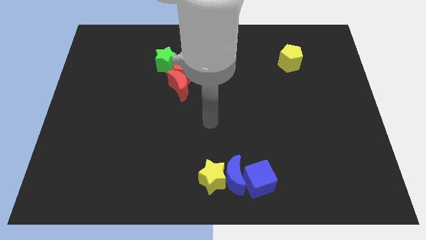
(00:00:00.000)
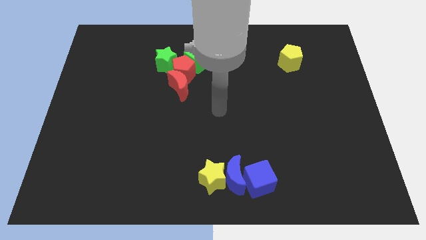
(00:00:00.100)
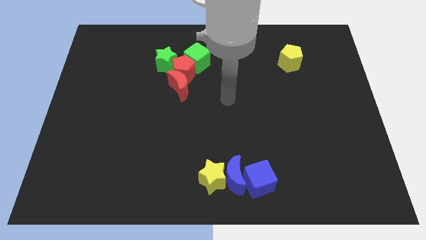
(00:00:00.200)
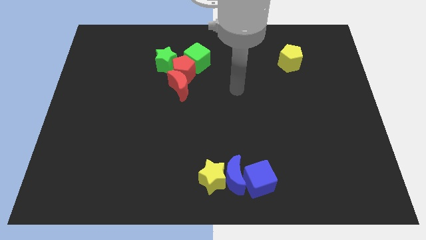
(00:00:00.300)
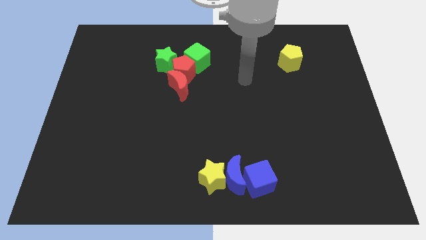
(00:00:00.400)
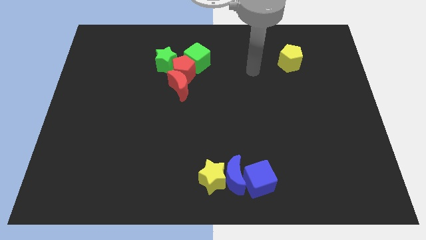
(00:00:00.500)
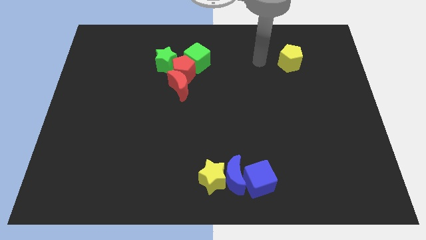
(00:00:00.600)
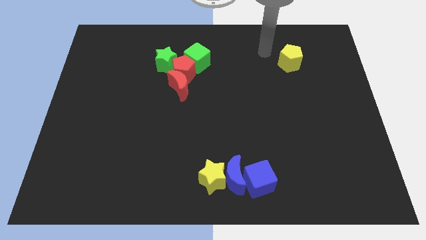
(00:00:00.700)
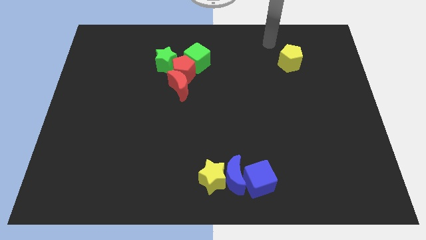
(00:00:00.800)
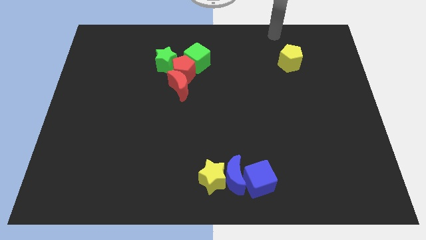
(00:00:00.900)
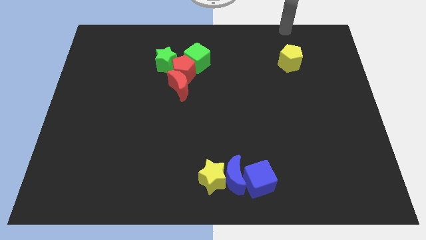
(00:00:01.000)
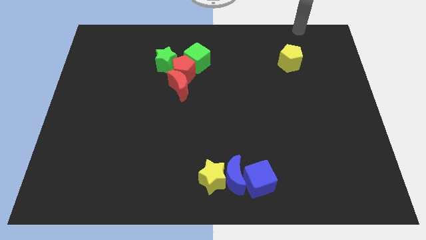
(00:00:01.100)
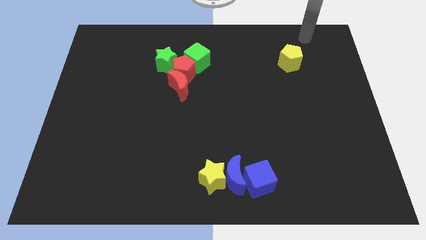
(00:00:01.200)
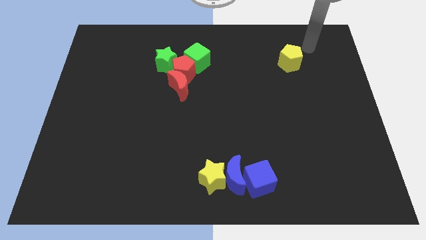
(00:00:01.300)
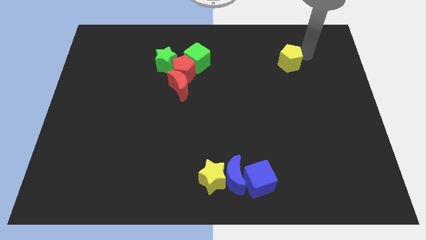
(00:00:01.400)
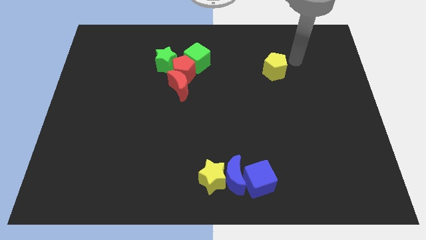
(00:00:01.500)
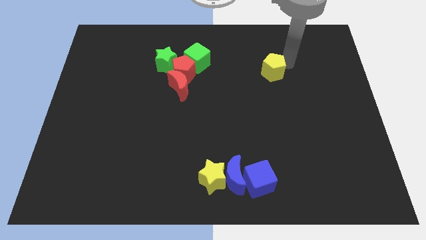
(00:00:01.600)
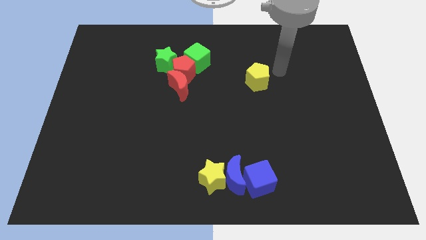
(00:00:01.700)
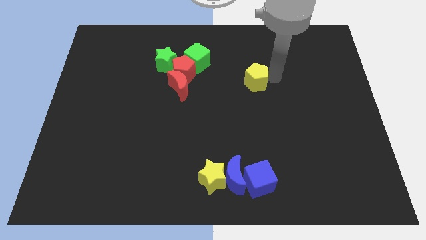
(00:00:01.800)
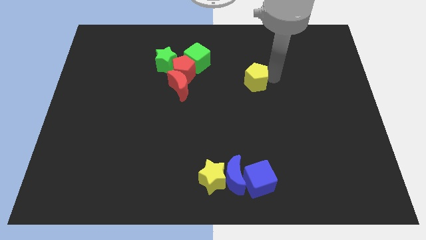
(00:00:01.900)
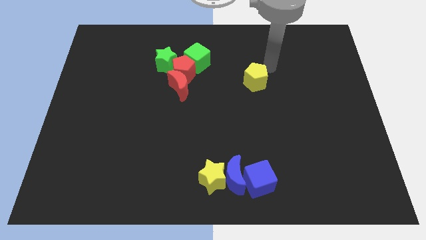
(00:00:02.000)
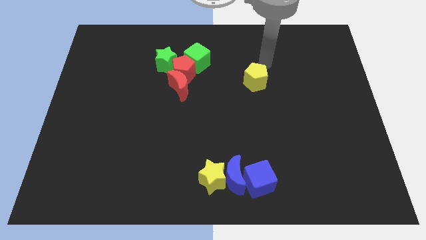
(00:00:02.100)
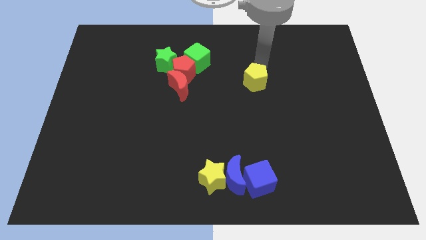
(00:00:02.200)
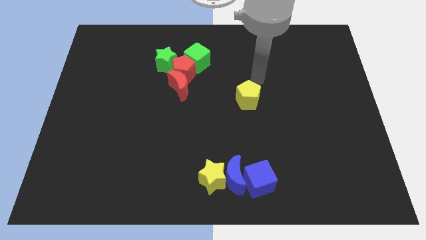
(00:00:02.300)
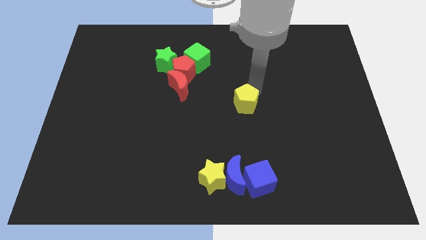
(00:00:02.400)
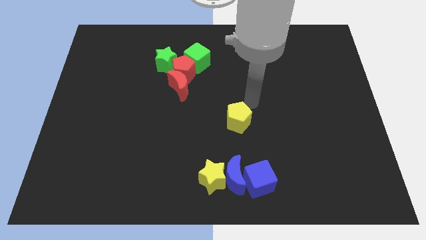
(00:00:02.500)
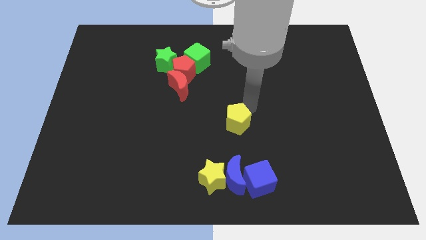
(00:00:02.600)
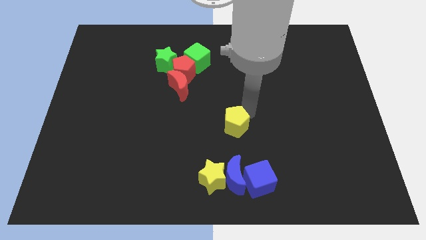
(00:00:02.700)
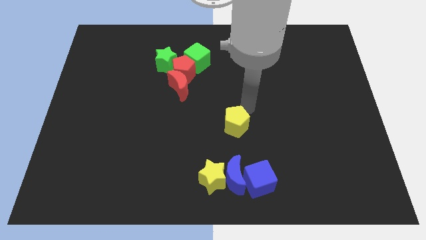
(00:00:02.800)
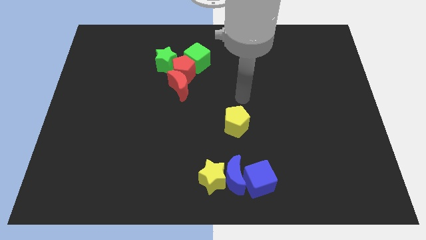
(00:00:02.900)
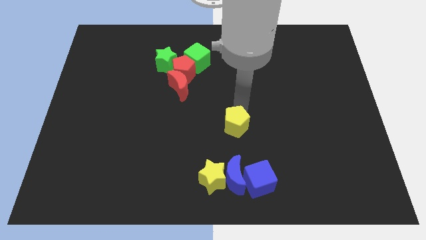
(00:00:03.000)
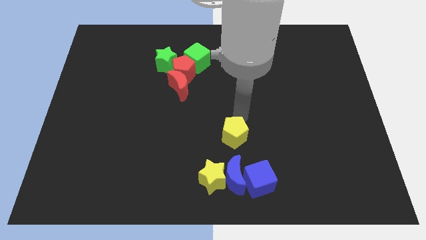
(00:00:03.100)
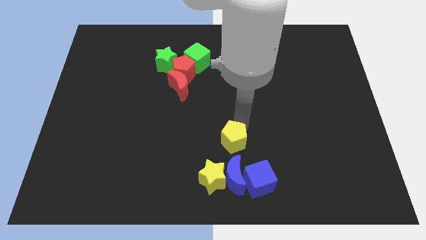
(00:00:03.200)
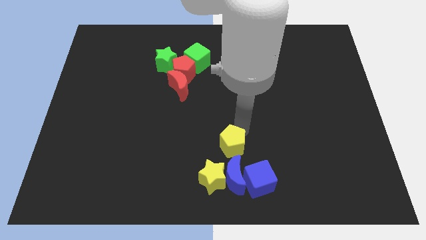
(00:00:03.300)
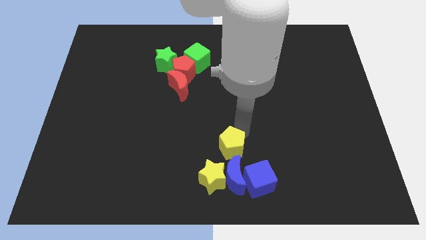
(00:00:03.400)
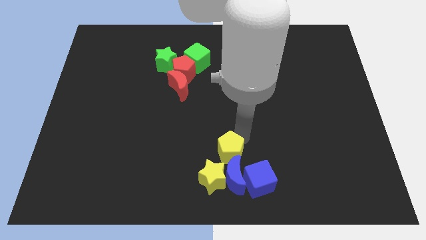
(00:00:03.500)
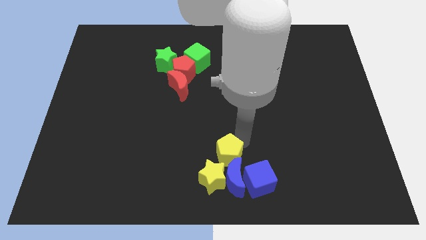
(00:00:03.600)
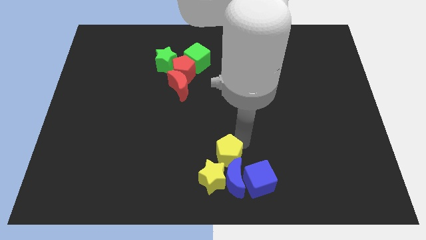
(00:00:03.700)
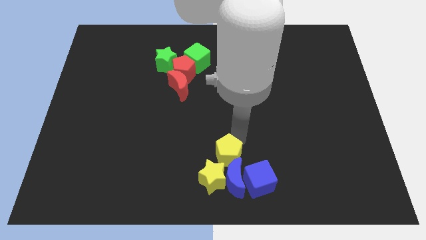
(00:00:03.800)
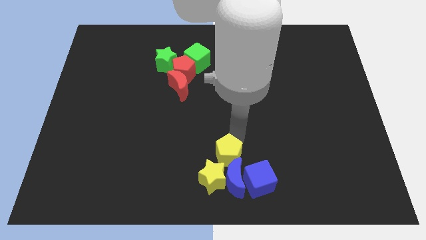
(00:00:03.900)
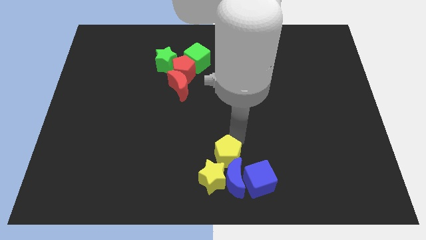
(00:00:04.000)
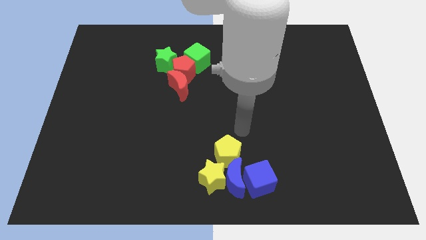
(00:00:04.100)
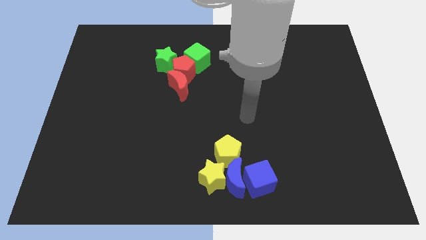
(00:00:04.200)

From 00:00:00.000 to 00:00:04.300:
place the yellow pentagon on top of blue crescent

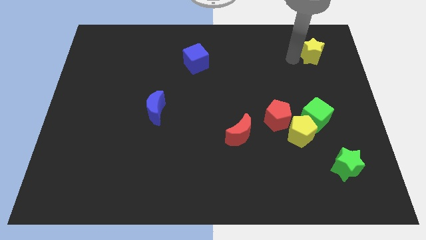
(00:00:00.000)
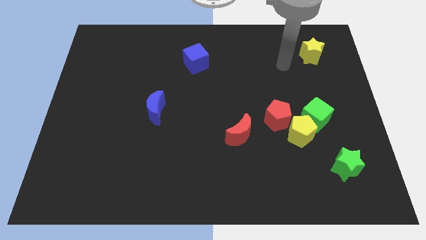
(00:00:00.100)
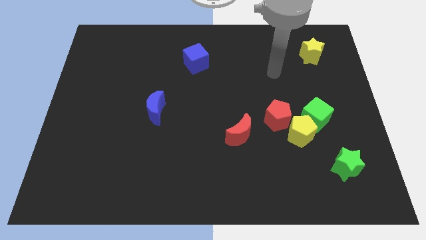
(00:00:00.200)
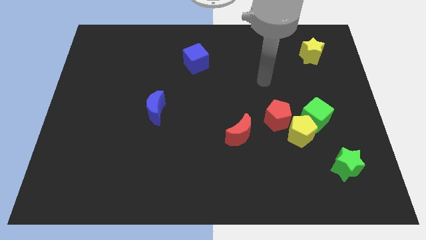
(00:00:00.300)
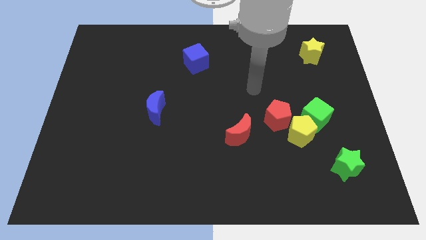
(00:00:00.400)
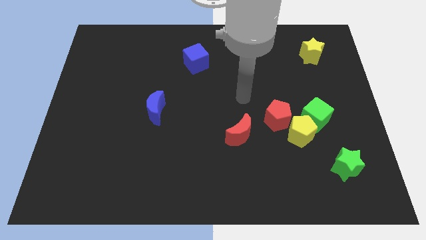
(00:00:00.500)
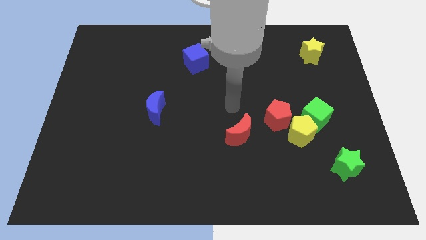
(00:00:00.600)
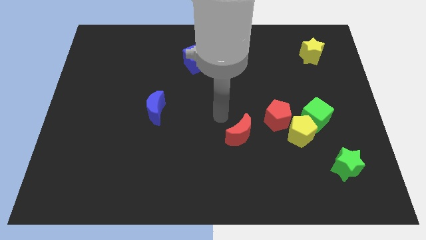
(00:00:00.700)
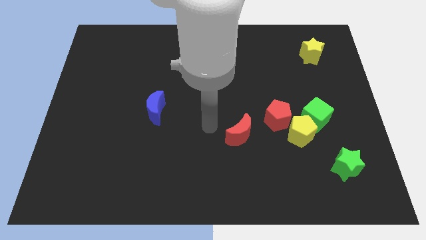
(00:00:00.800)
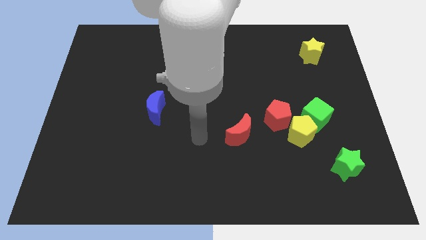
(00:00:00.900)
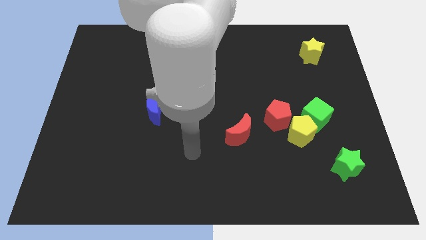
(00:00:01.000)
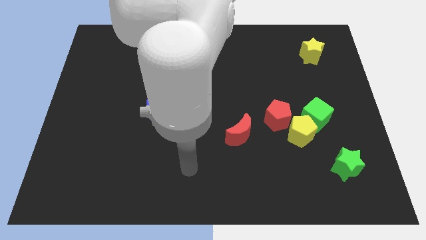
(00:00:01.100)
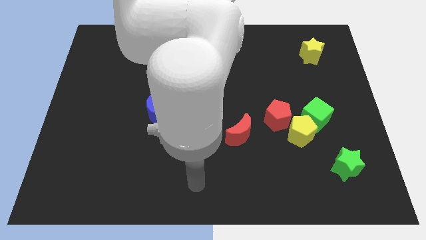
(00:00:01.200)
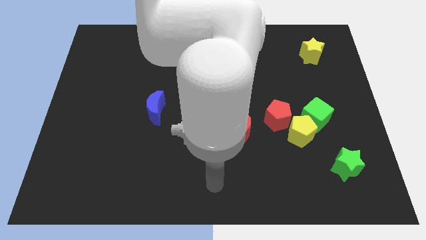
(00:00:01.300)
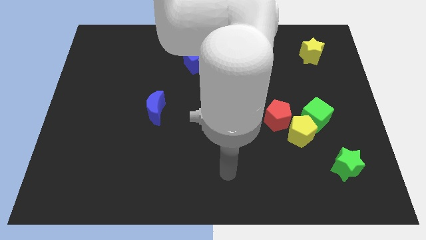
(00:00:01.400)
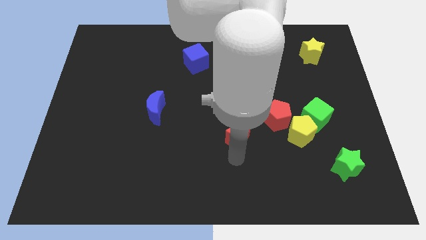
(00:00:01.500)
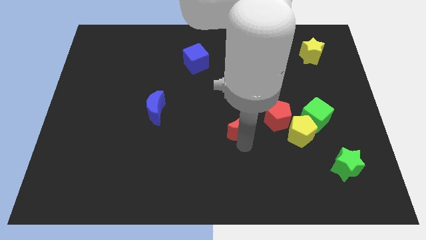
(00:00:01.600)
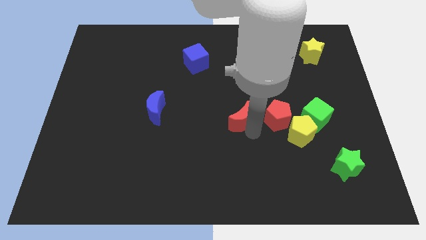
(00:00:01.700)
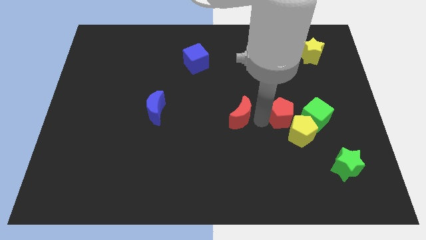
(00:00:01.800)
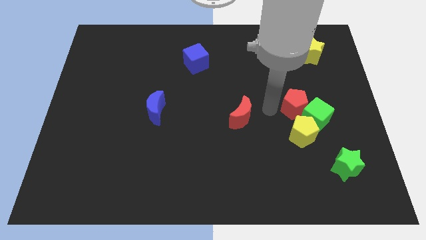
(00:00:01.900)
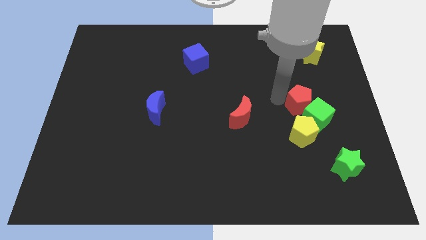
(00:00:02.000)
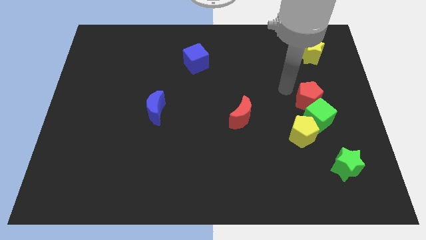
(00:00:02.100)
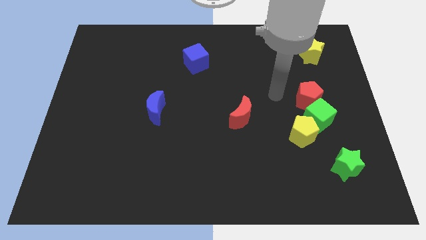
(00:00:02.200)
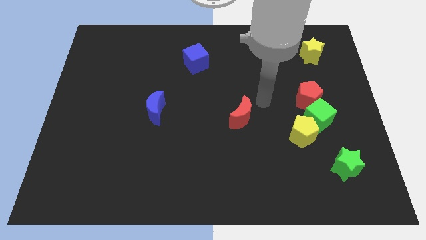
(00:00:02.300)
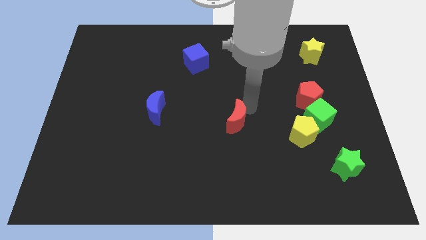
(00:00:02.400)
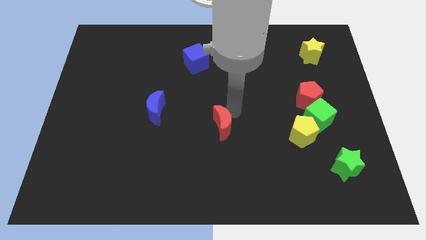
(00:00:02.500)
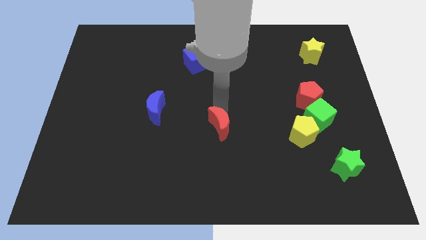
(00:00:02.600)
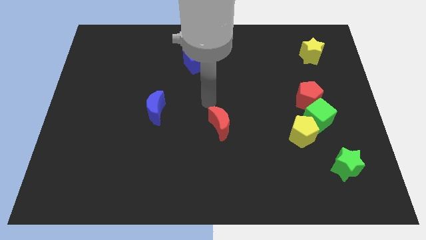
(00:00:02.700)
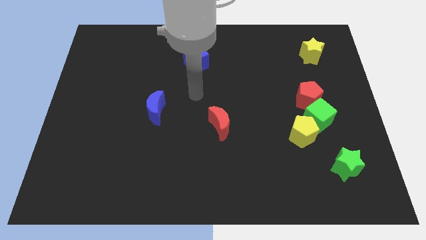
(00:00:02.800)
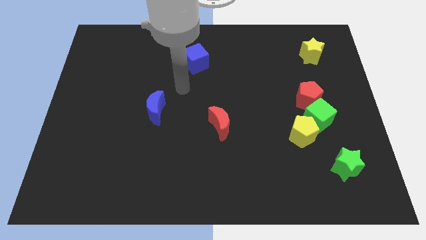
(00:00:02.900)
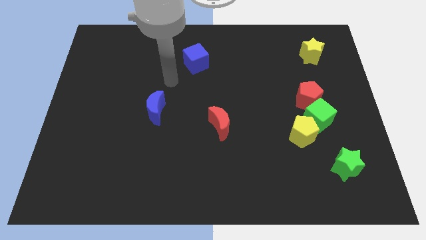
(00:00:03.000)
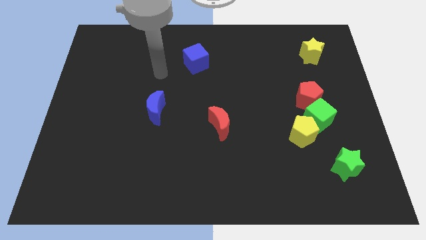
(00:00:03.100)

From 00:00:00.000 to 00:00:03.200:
separate the red crescent from the red pentagon

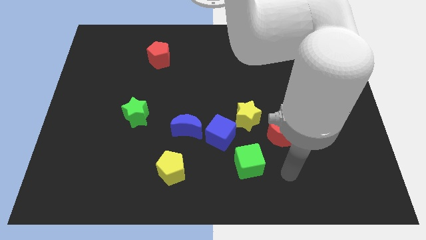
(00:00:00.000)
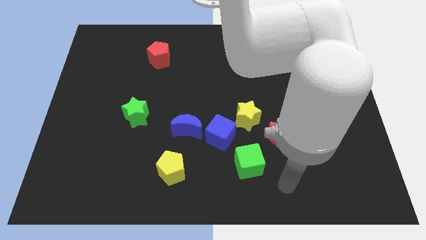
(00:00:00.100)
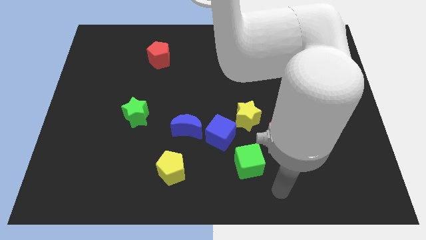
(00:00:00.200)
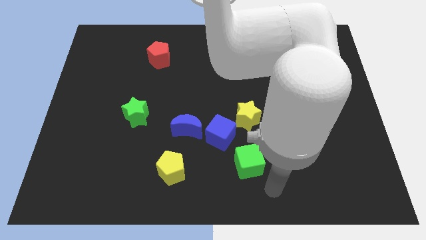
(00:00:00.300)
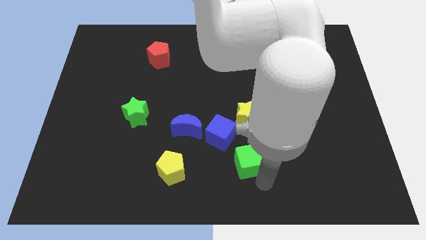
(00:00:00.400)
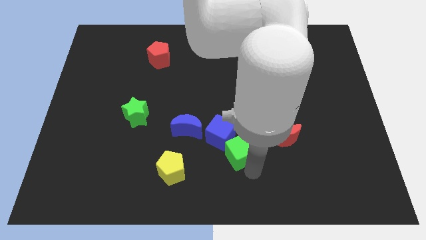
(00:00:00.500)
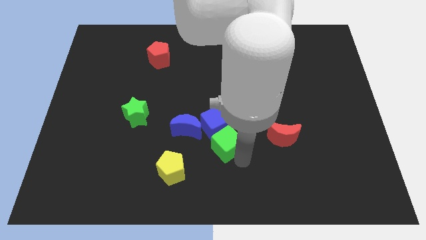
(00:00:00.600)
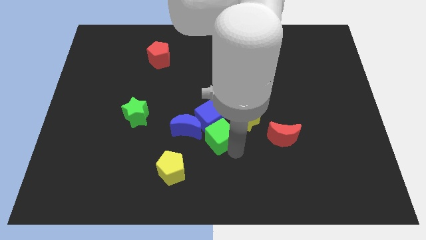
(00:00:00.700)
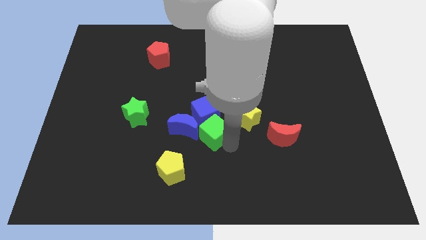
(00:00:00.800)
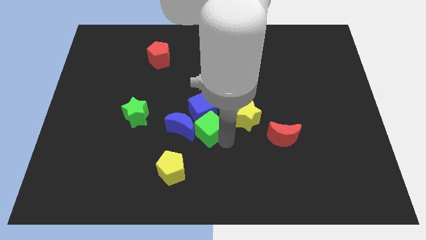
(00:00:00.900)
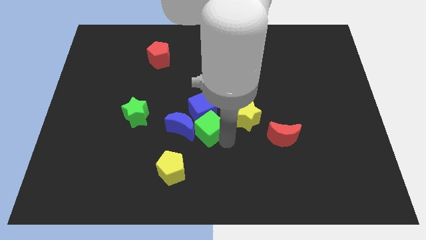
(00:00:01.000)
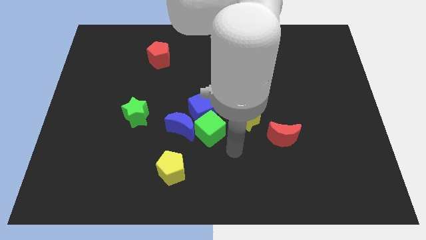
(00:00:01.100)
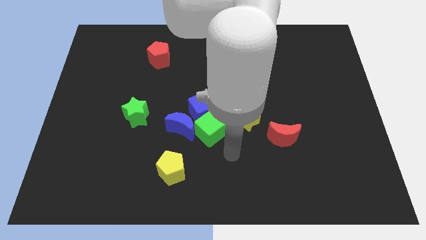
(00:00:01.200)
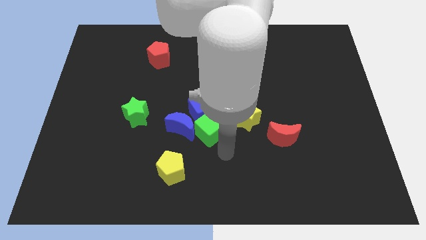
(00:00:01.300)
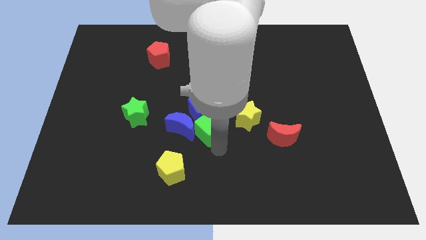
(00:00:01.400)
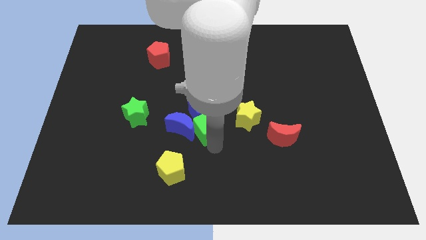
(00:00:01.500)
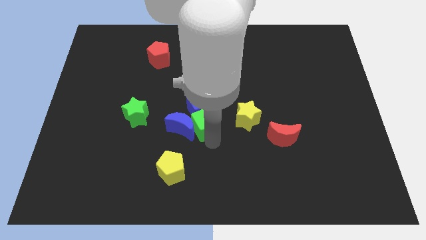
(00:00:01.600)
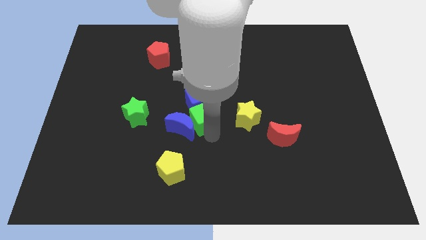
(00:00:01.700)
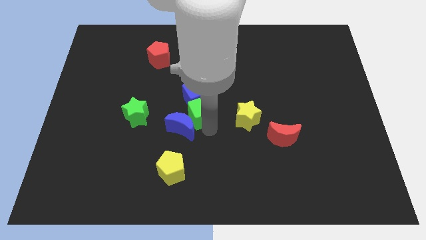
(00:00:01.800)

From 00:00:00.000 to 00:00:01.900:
push the green cube into the blue cube
